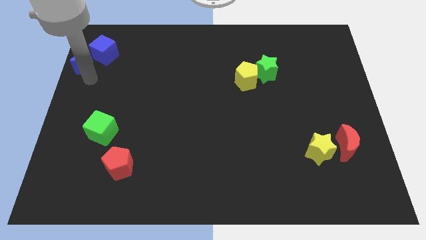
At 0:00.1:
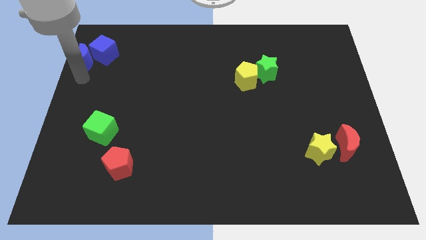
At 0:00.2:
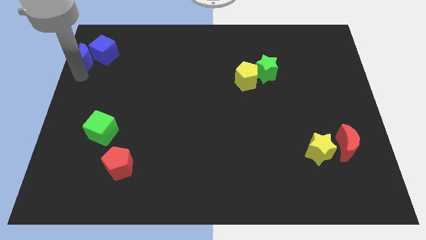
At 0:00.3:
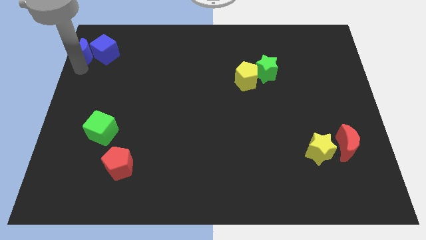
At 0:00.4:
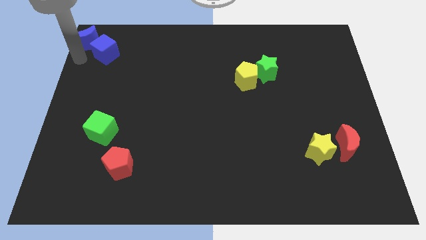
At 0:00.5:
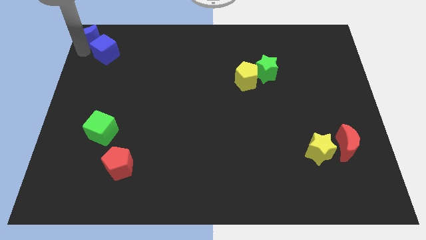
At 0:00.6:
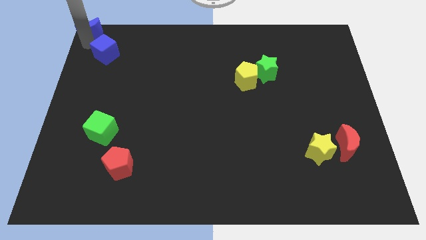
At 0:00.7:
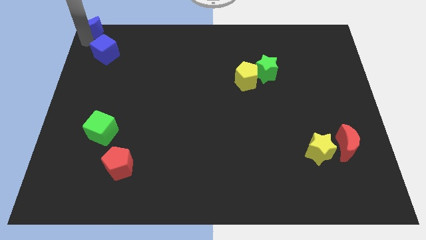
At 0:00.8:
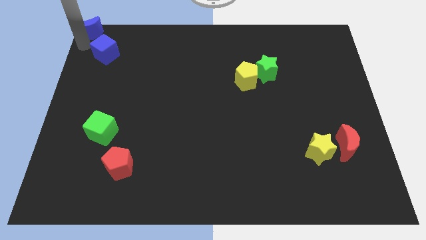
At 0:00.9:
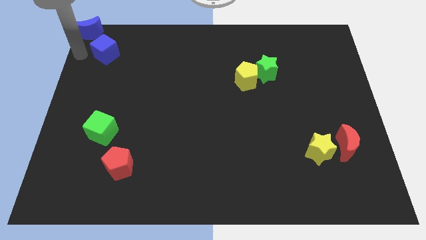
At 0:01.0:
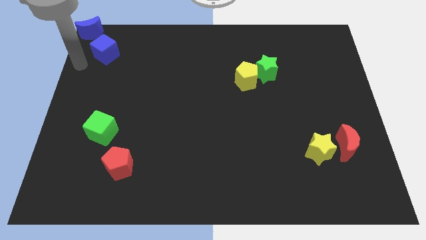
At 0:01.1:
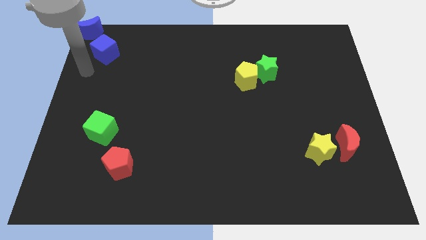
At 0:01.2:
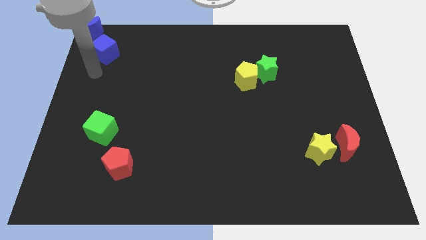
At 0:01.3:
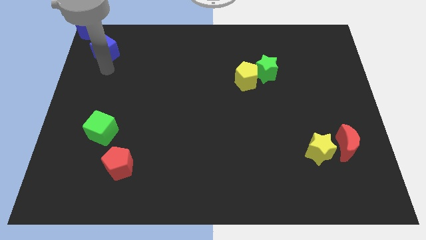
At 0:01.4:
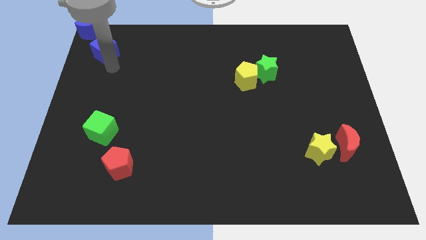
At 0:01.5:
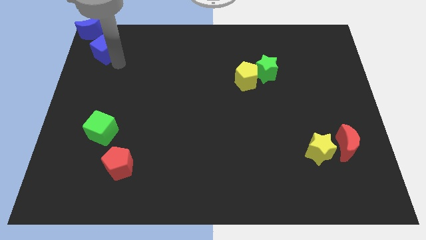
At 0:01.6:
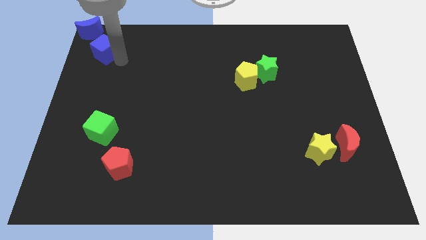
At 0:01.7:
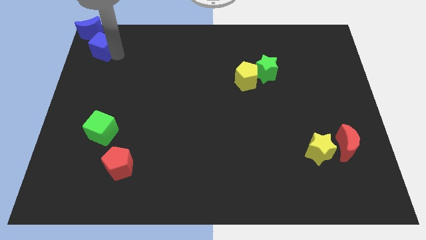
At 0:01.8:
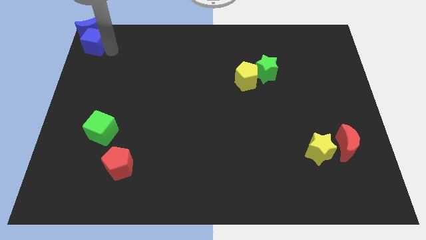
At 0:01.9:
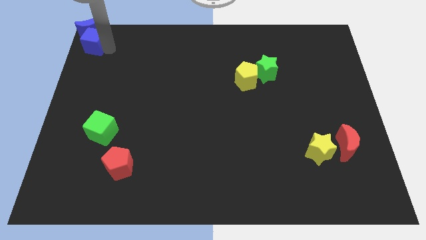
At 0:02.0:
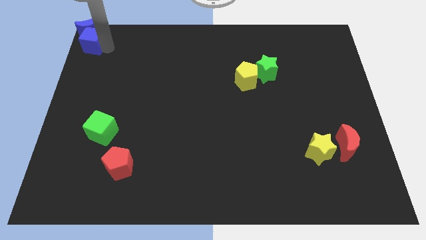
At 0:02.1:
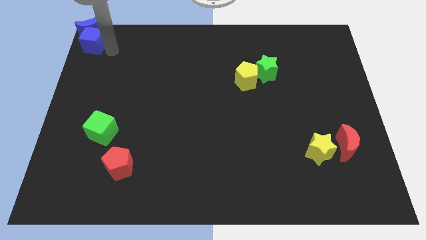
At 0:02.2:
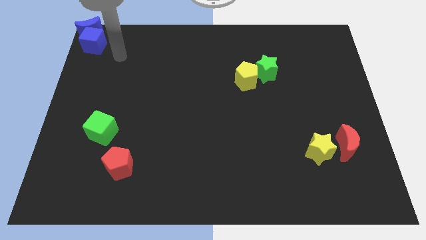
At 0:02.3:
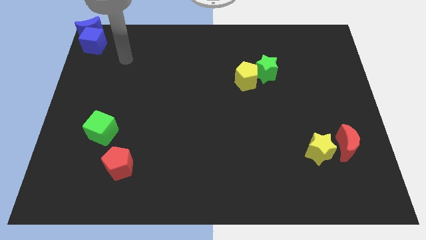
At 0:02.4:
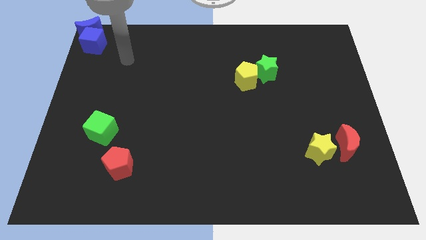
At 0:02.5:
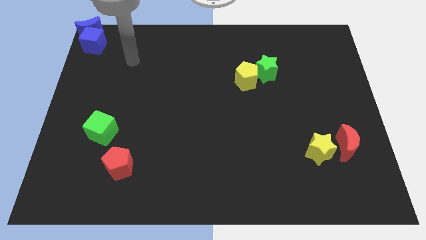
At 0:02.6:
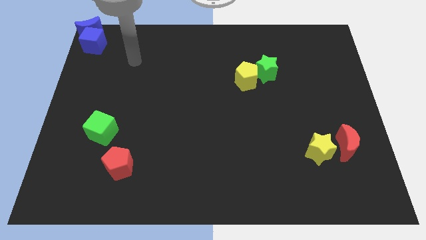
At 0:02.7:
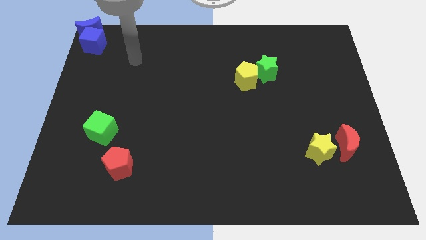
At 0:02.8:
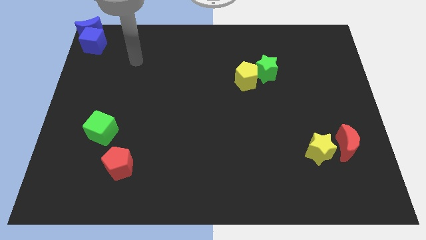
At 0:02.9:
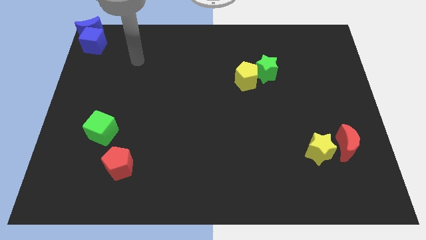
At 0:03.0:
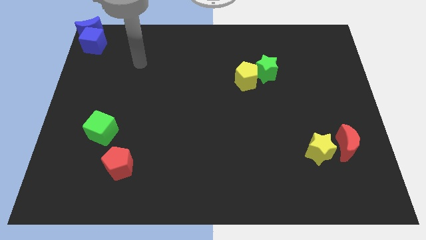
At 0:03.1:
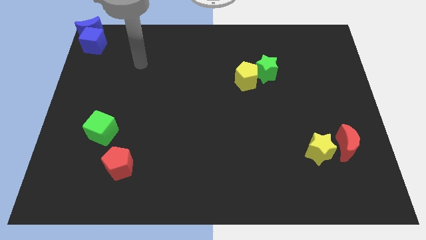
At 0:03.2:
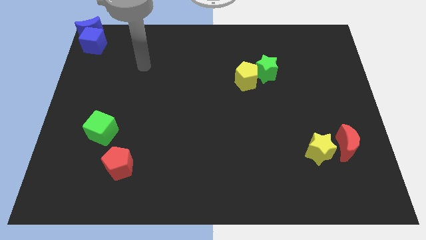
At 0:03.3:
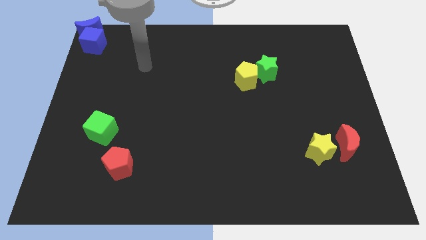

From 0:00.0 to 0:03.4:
slightly push the blue blocks to the top left corner

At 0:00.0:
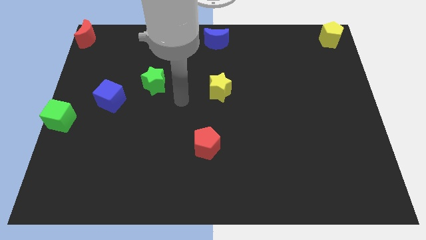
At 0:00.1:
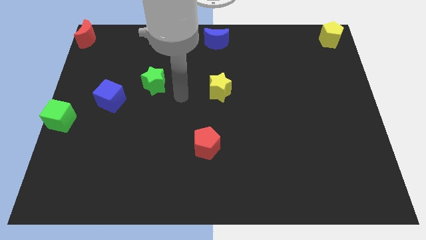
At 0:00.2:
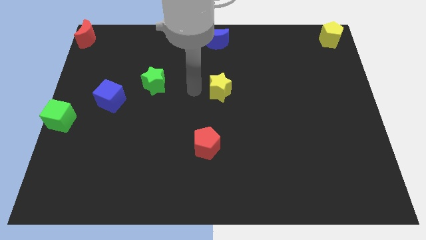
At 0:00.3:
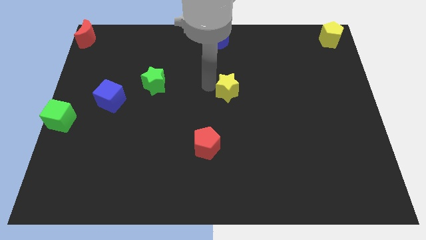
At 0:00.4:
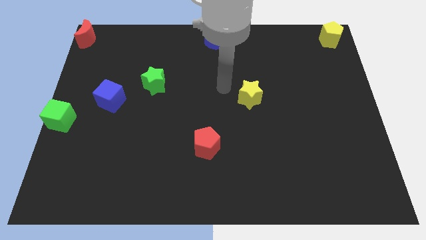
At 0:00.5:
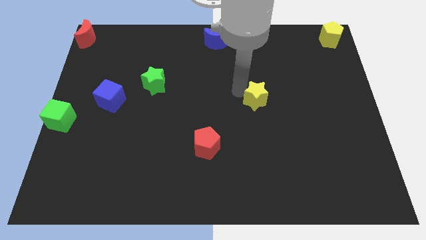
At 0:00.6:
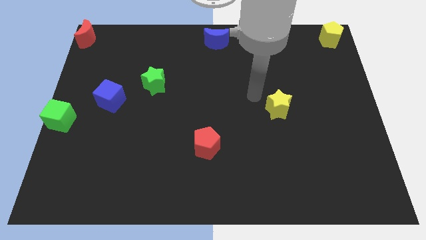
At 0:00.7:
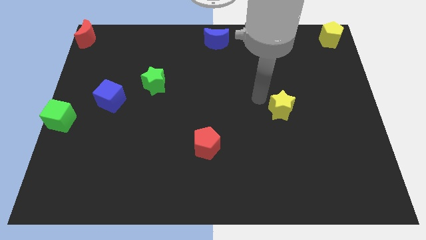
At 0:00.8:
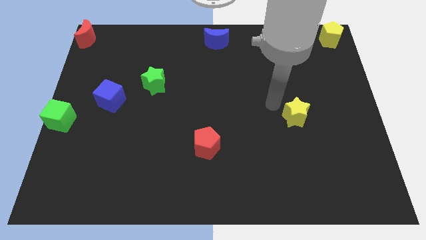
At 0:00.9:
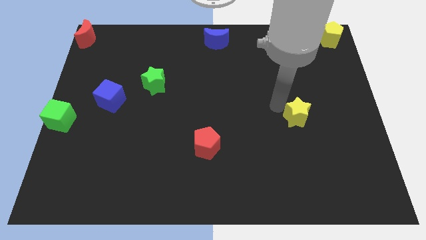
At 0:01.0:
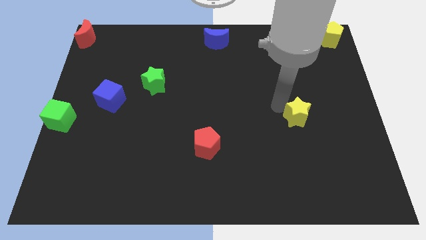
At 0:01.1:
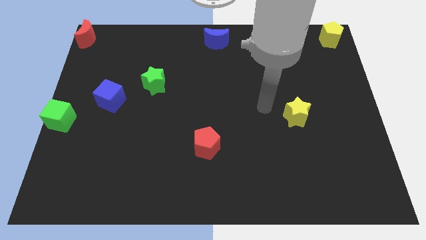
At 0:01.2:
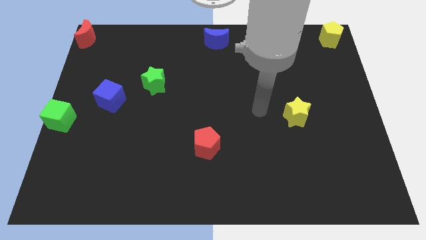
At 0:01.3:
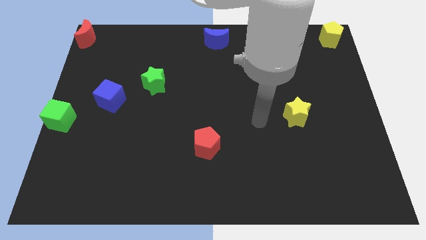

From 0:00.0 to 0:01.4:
move the yellow star to the right of the board

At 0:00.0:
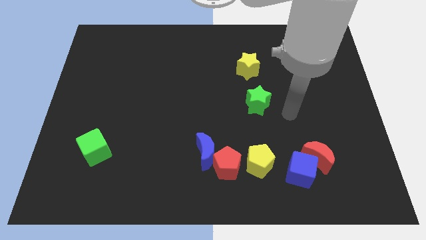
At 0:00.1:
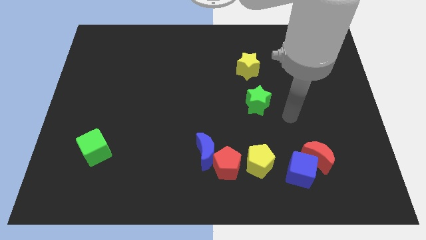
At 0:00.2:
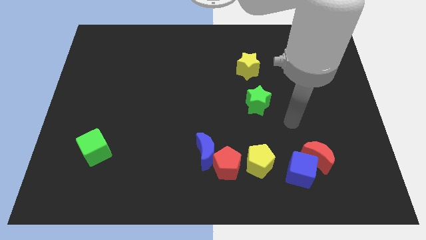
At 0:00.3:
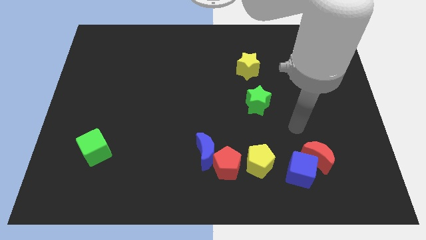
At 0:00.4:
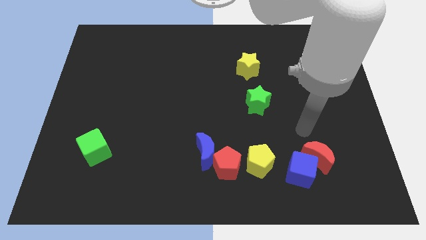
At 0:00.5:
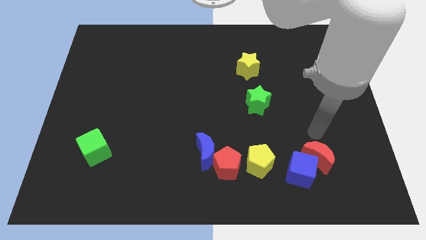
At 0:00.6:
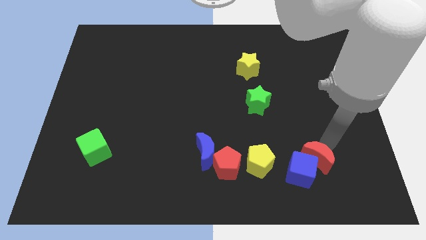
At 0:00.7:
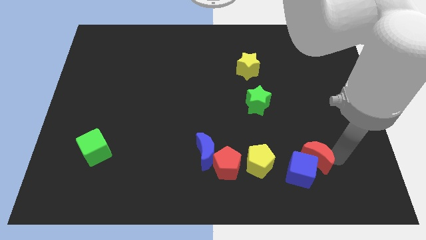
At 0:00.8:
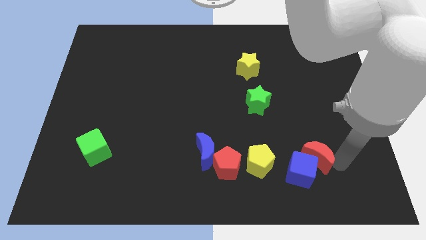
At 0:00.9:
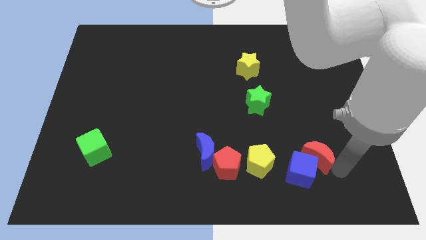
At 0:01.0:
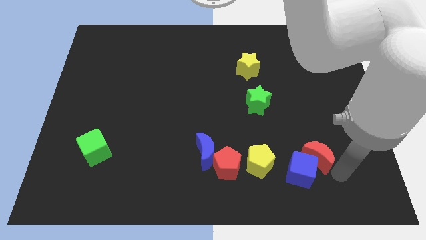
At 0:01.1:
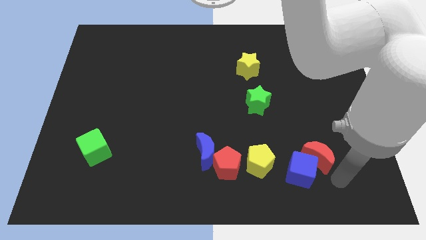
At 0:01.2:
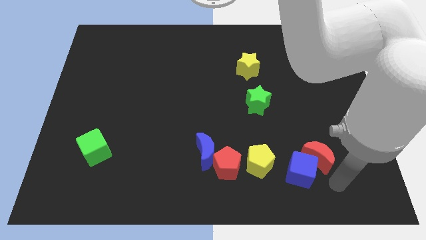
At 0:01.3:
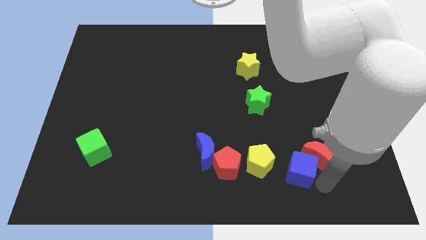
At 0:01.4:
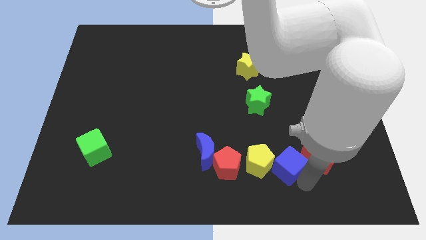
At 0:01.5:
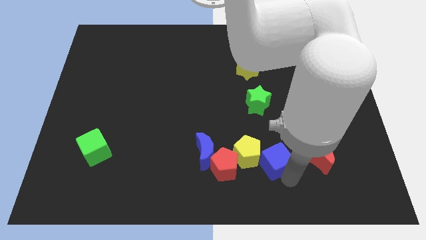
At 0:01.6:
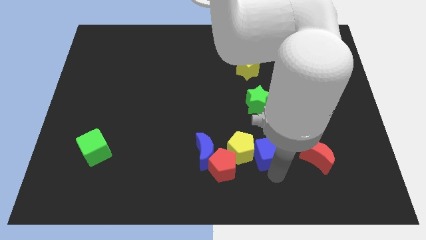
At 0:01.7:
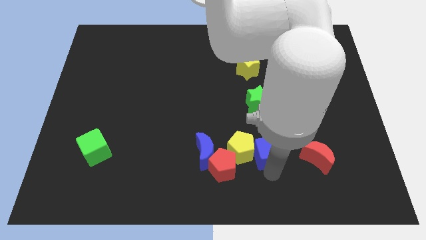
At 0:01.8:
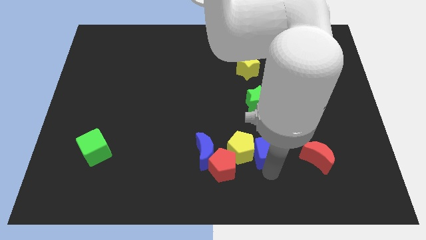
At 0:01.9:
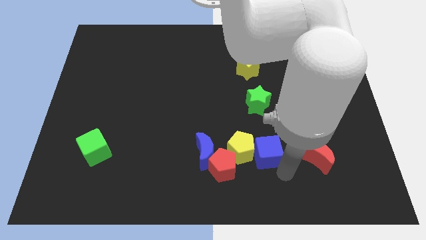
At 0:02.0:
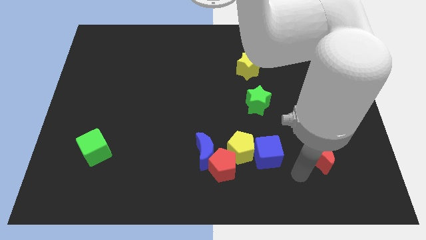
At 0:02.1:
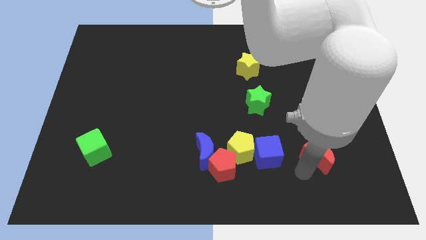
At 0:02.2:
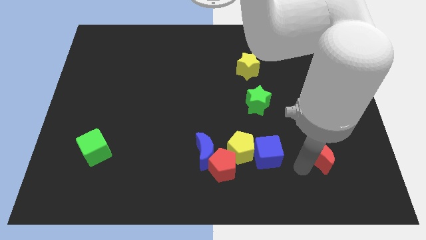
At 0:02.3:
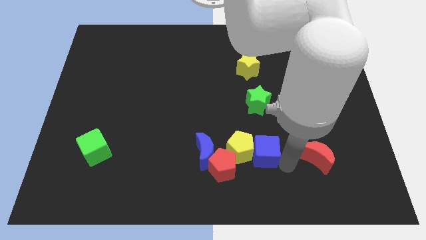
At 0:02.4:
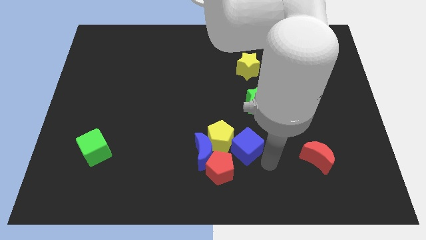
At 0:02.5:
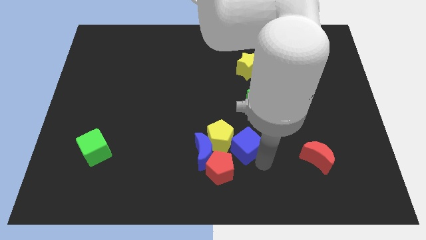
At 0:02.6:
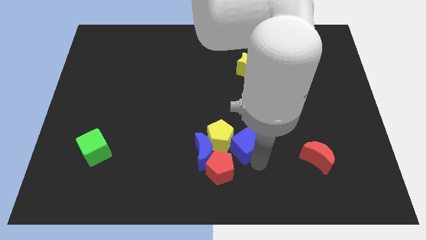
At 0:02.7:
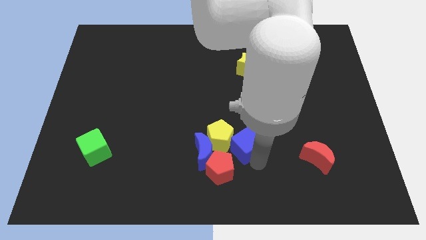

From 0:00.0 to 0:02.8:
push the blue cube into the yellow pentagon

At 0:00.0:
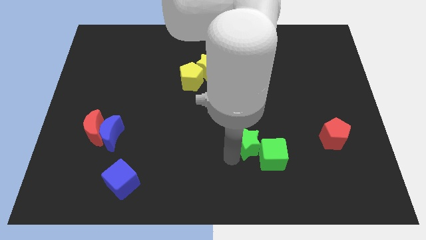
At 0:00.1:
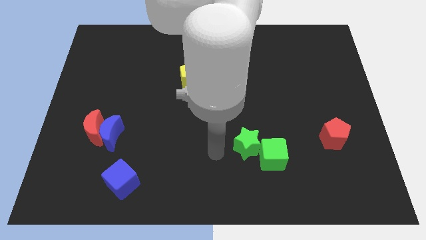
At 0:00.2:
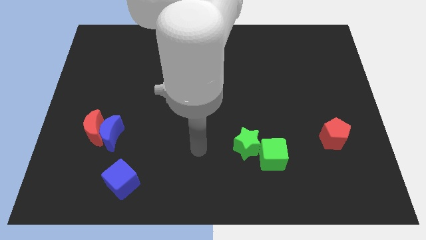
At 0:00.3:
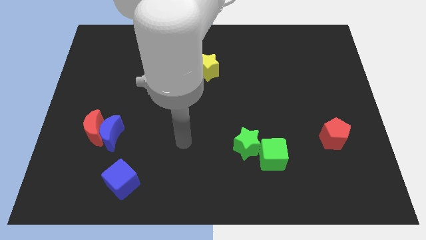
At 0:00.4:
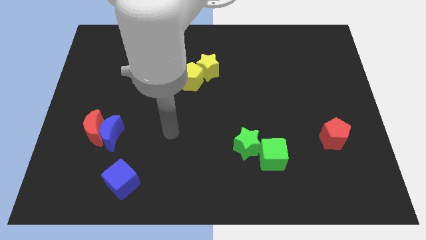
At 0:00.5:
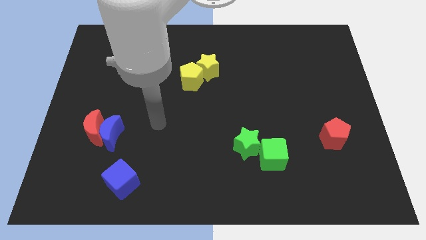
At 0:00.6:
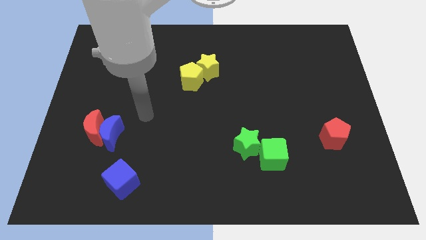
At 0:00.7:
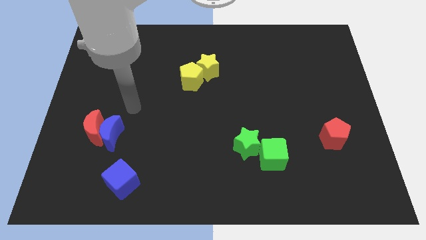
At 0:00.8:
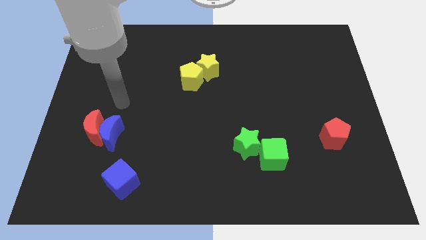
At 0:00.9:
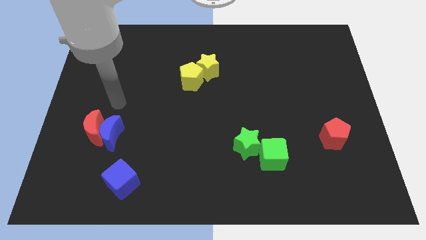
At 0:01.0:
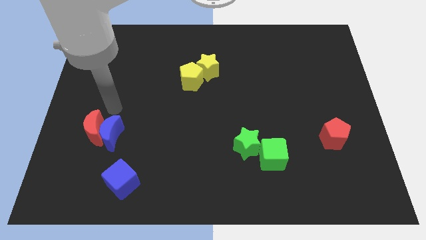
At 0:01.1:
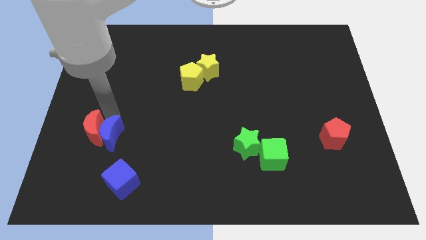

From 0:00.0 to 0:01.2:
go away from the green star
